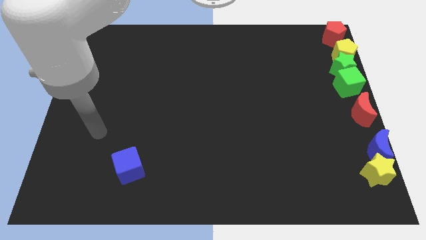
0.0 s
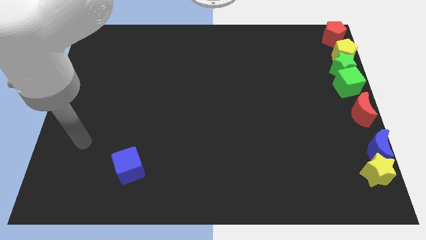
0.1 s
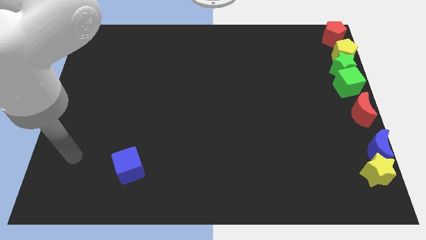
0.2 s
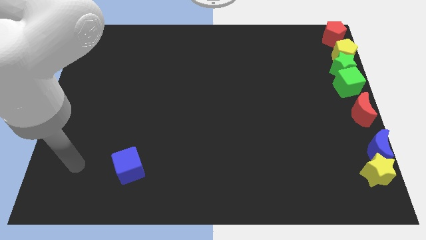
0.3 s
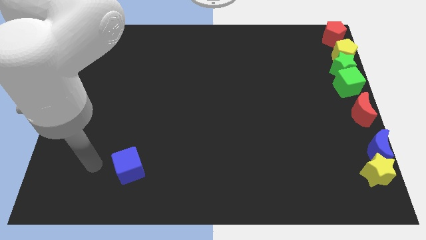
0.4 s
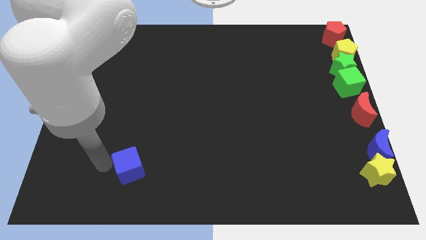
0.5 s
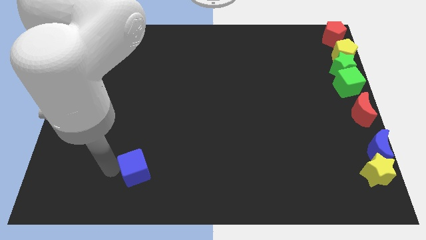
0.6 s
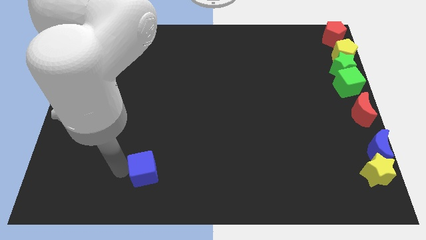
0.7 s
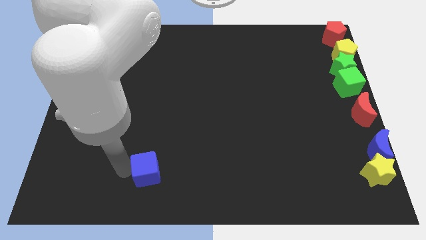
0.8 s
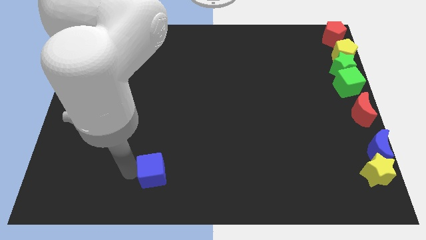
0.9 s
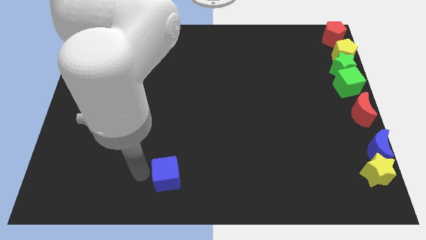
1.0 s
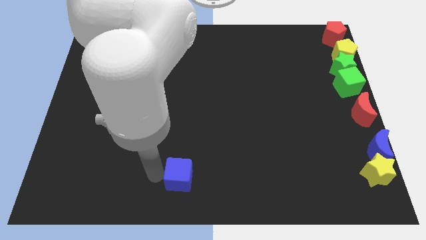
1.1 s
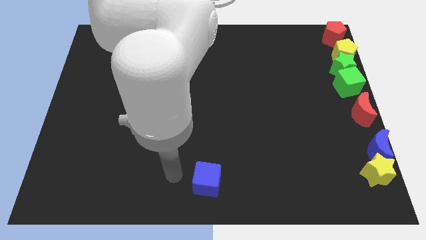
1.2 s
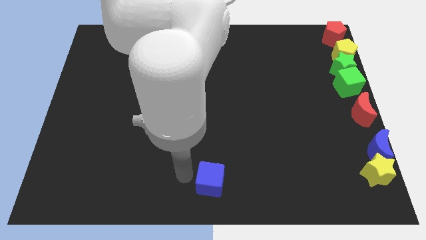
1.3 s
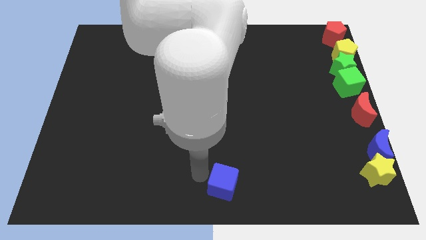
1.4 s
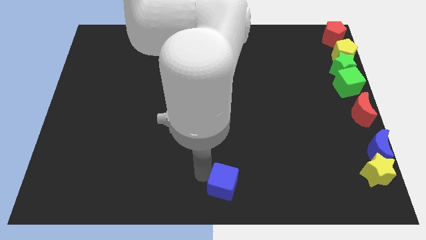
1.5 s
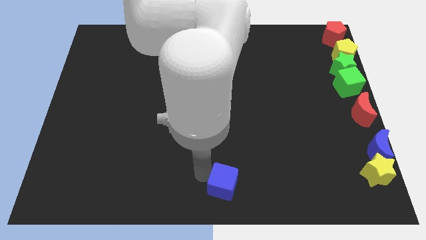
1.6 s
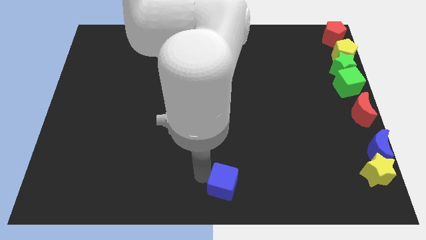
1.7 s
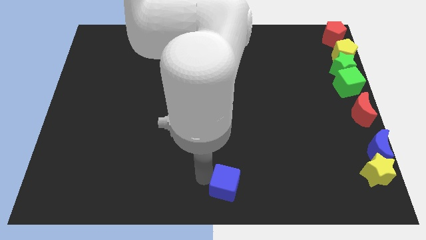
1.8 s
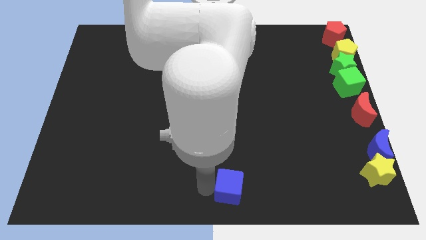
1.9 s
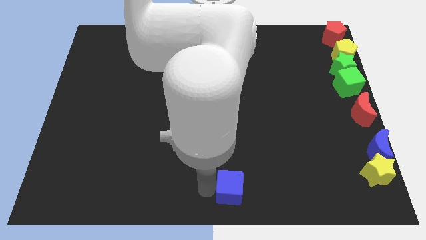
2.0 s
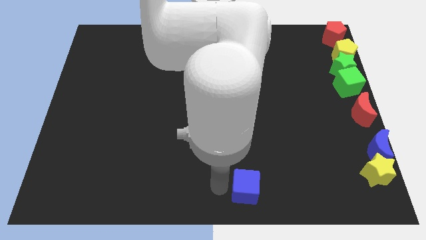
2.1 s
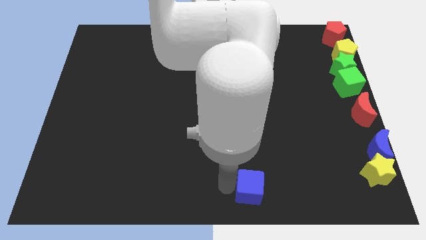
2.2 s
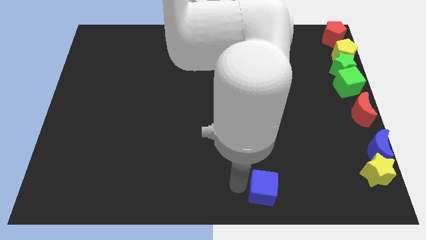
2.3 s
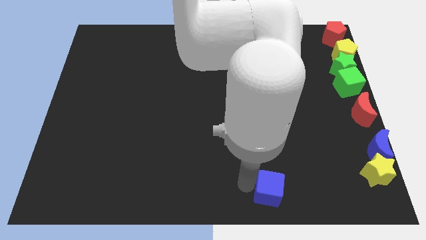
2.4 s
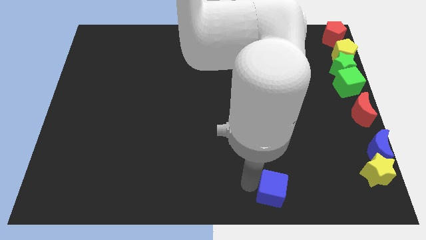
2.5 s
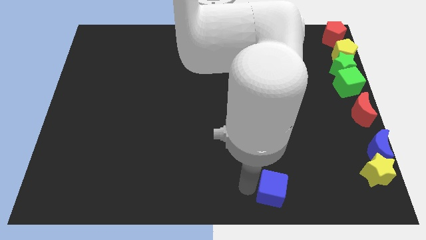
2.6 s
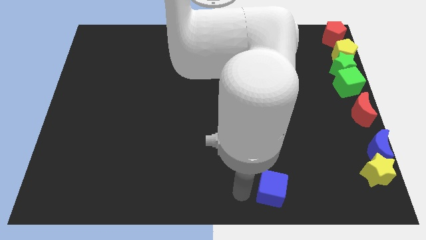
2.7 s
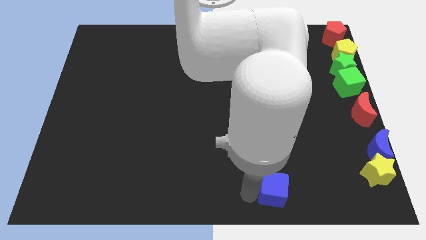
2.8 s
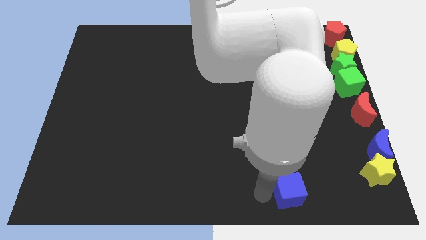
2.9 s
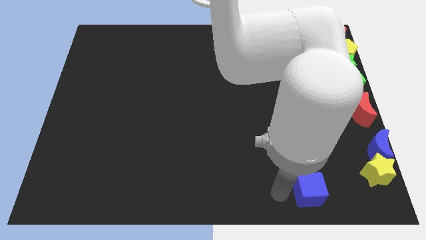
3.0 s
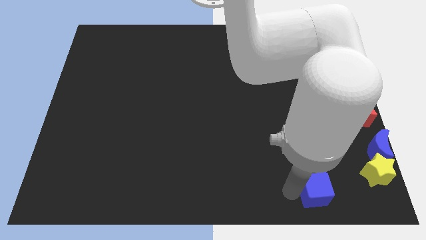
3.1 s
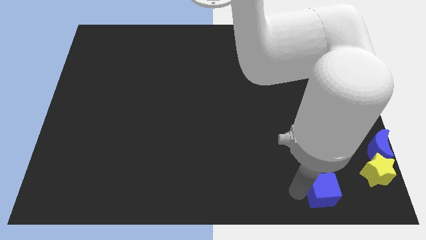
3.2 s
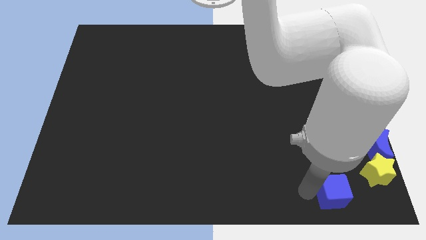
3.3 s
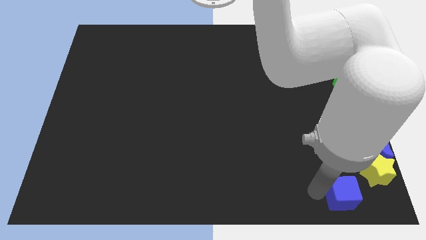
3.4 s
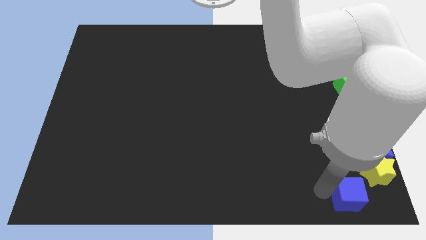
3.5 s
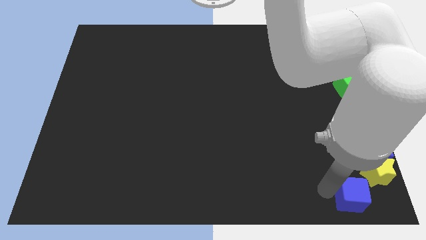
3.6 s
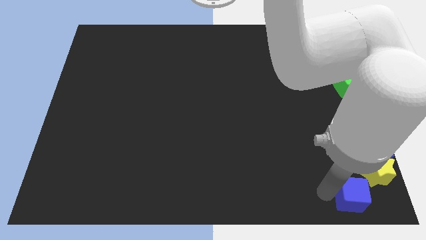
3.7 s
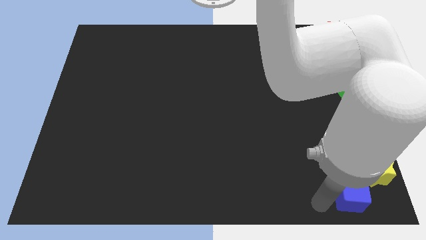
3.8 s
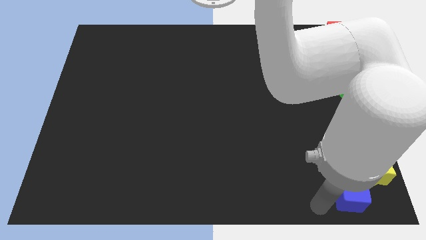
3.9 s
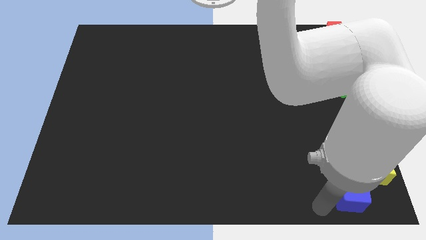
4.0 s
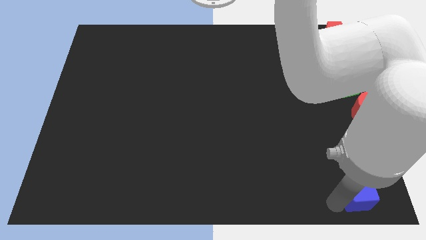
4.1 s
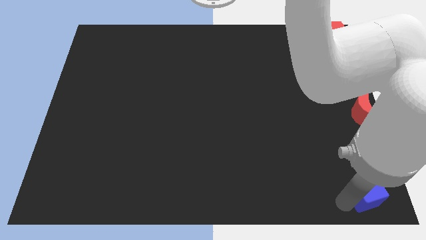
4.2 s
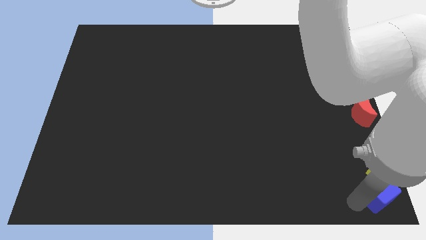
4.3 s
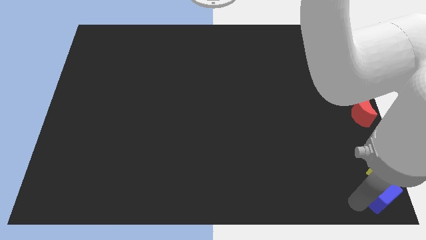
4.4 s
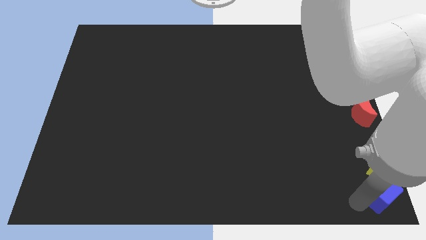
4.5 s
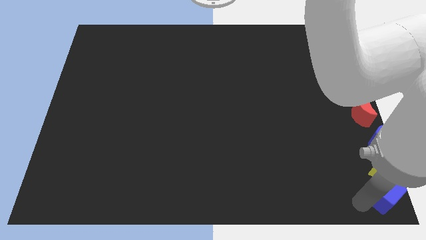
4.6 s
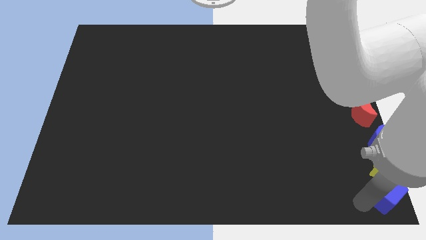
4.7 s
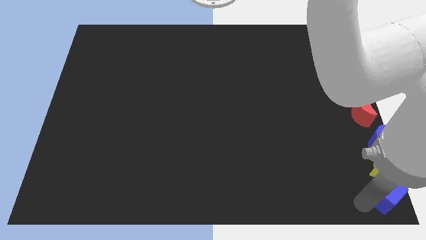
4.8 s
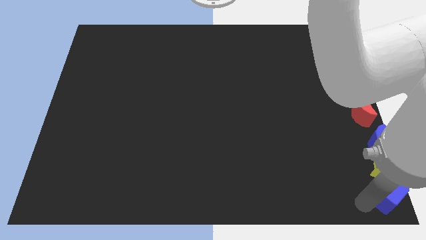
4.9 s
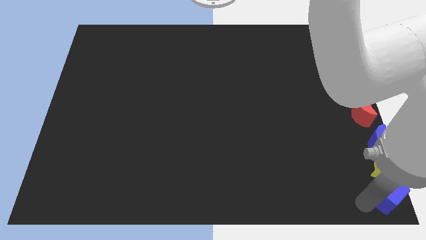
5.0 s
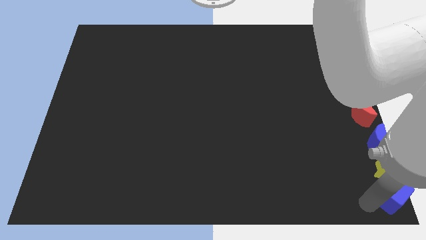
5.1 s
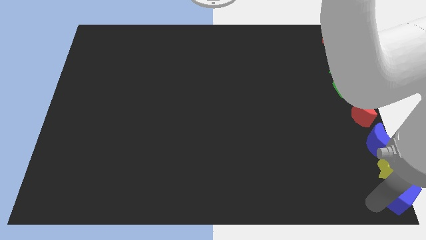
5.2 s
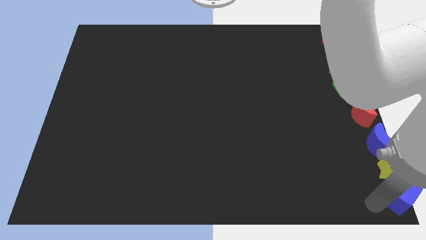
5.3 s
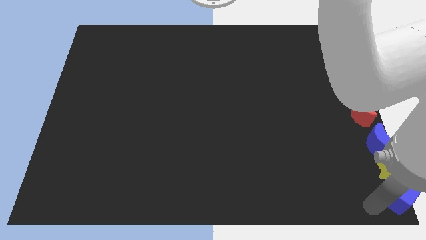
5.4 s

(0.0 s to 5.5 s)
push the blue cube to the bottom right corner

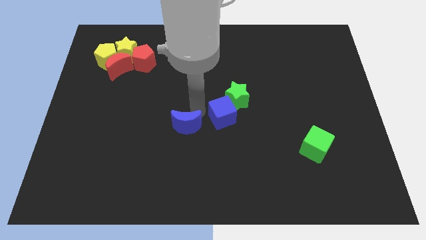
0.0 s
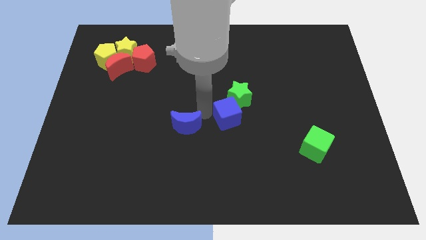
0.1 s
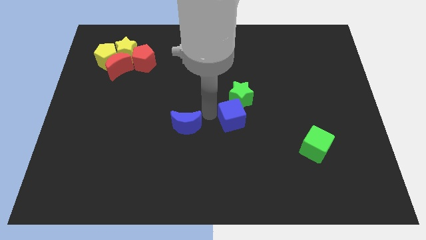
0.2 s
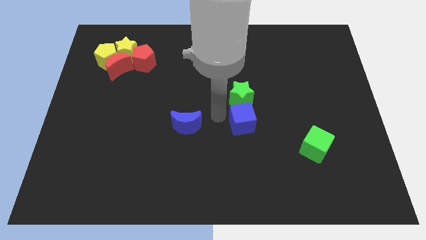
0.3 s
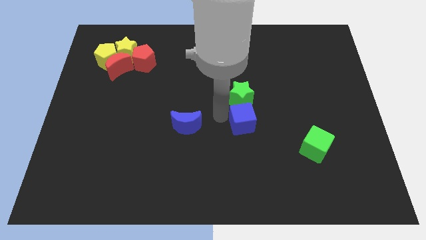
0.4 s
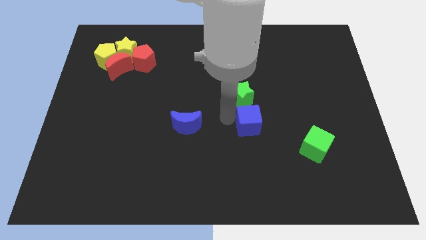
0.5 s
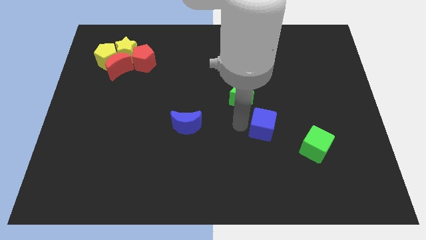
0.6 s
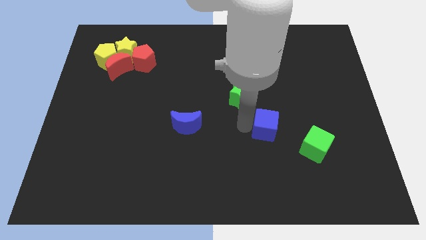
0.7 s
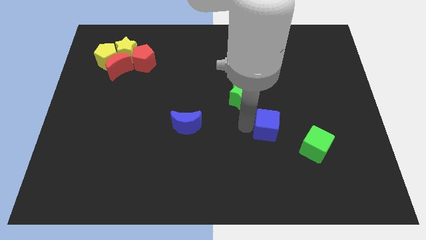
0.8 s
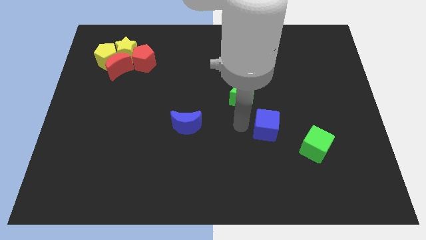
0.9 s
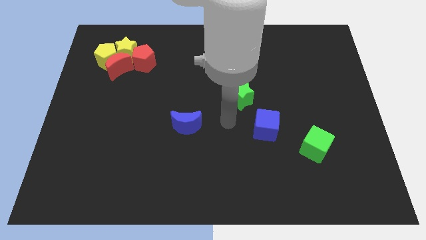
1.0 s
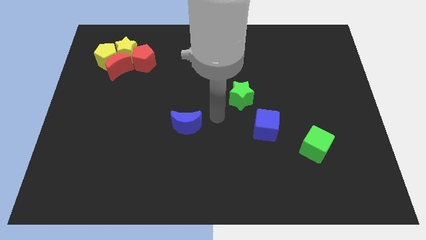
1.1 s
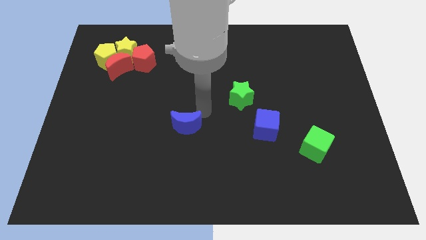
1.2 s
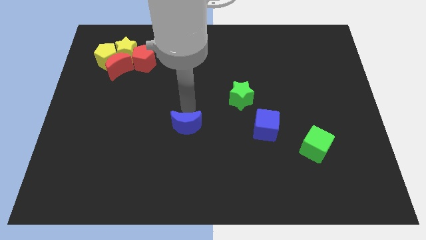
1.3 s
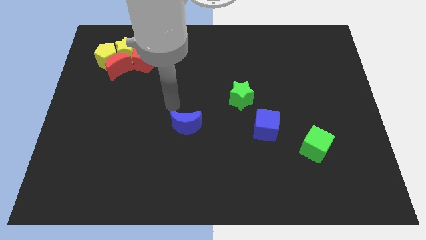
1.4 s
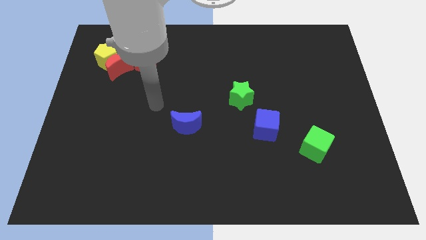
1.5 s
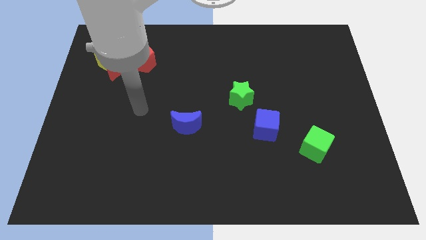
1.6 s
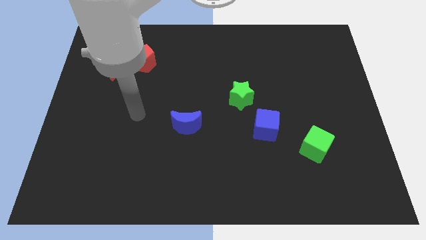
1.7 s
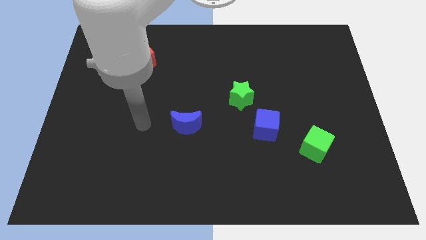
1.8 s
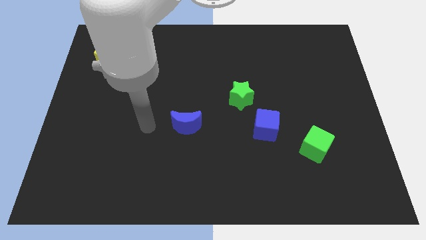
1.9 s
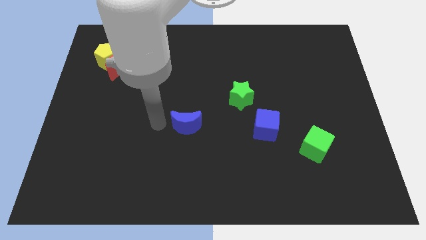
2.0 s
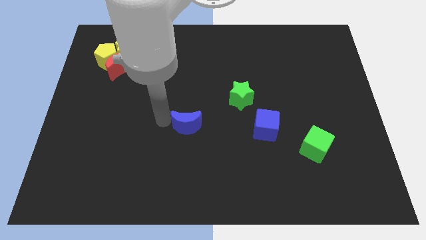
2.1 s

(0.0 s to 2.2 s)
put the blue cube between the green blocks

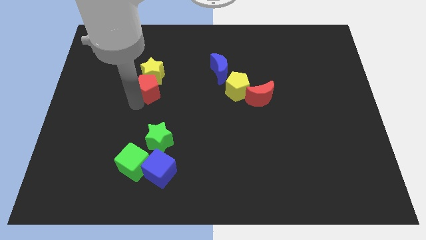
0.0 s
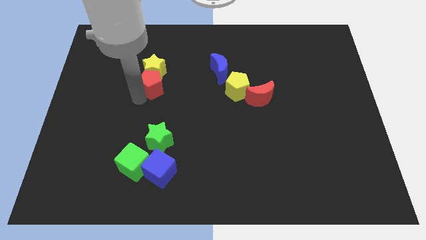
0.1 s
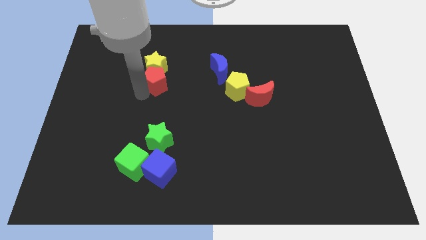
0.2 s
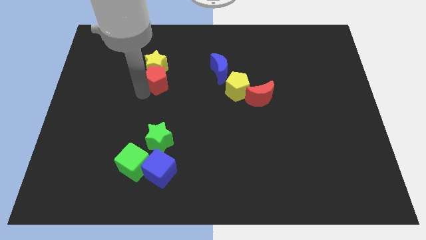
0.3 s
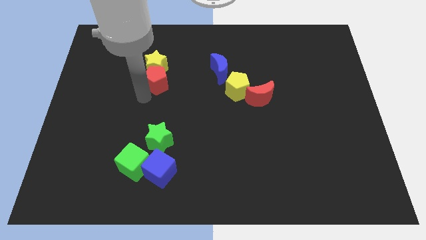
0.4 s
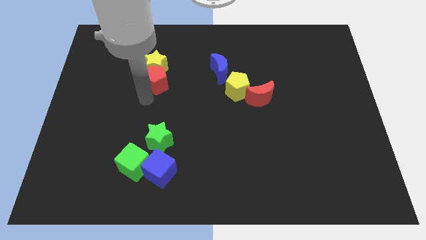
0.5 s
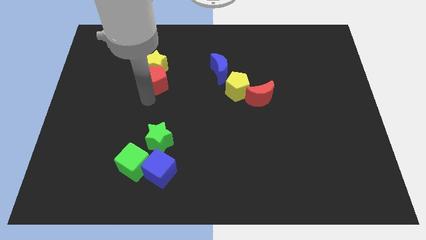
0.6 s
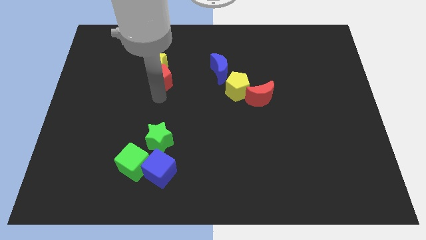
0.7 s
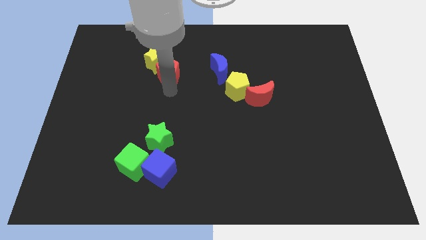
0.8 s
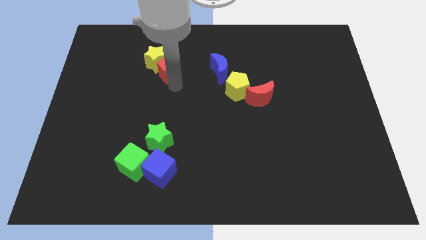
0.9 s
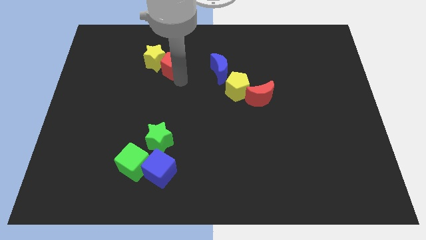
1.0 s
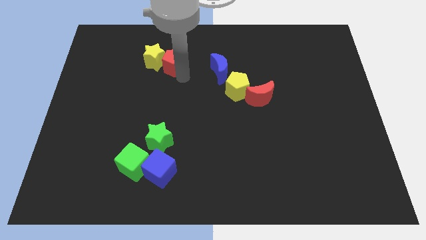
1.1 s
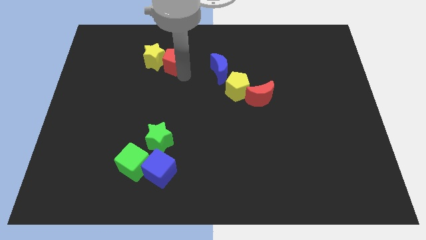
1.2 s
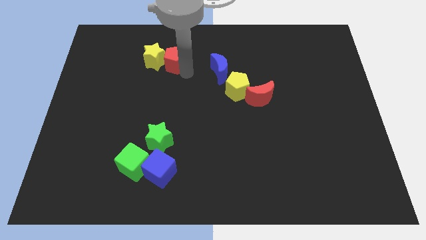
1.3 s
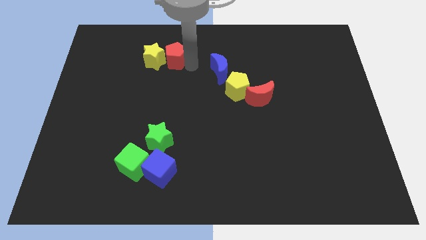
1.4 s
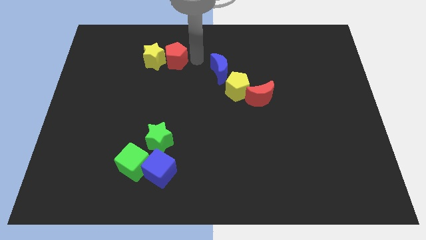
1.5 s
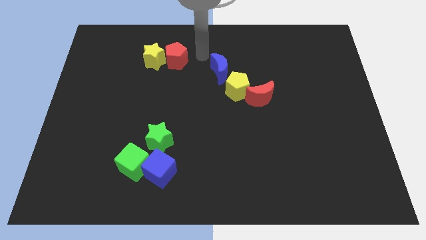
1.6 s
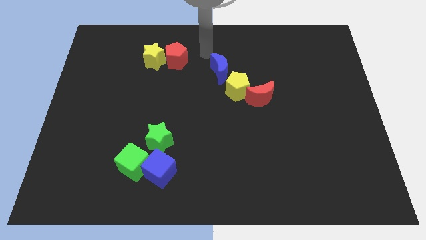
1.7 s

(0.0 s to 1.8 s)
put the red pentagon on the right side of the yellow star
